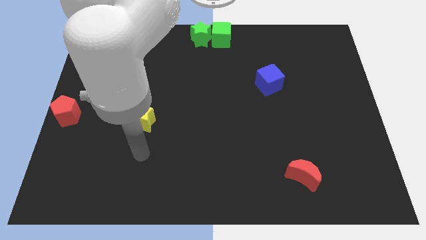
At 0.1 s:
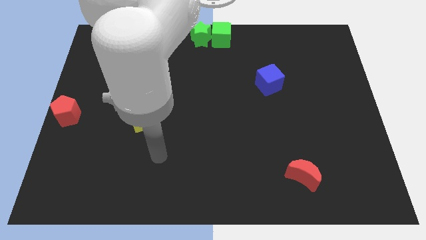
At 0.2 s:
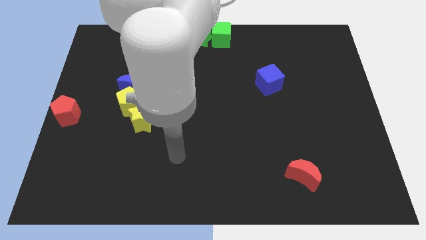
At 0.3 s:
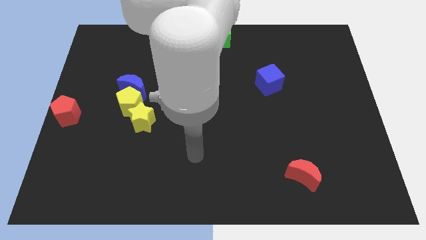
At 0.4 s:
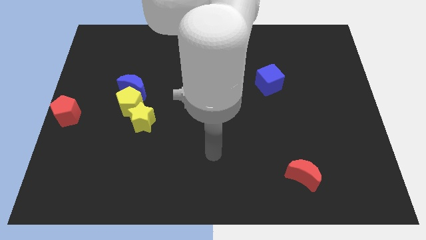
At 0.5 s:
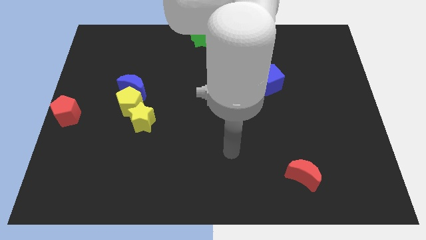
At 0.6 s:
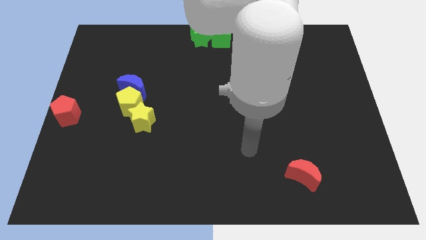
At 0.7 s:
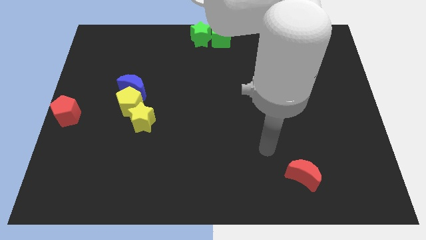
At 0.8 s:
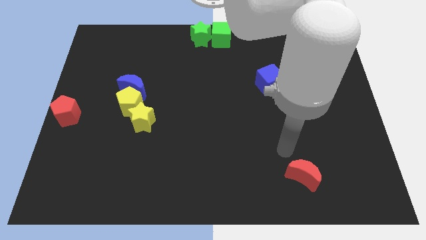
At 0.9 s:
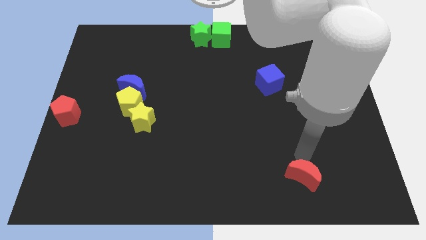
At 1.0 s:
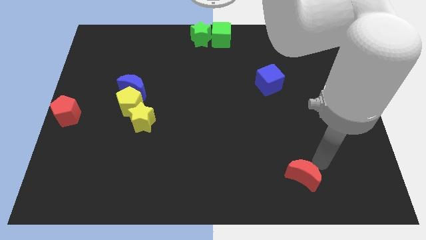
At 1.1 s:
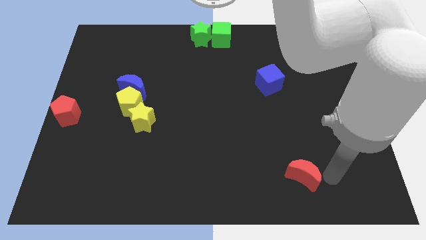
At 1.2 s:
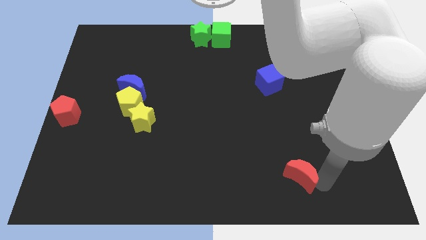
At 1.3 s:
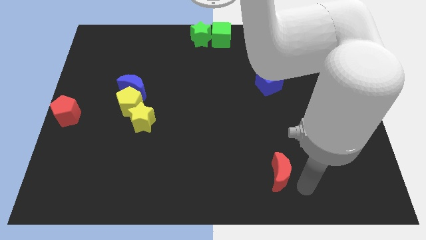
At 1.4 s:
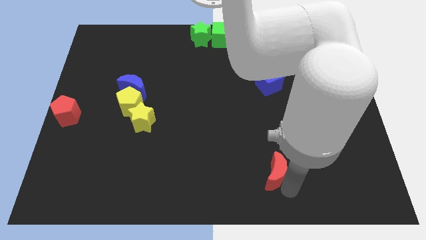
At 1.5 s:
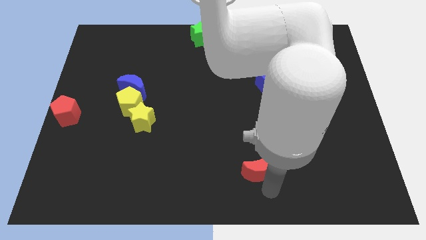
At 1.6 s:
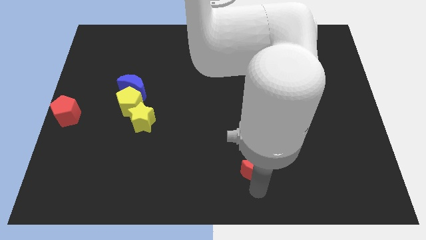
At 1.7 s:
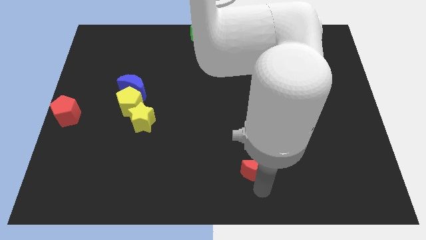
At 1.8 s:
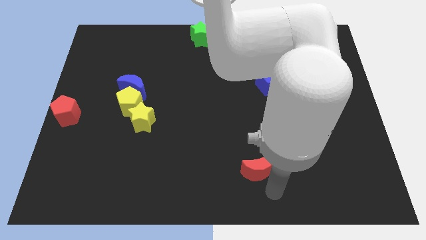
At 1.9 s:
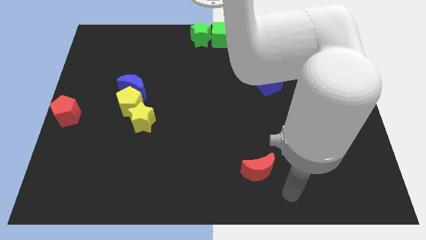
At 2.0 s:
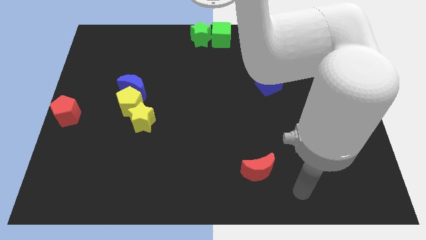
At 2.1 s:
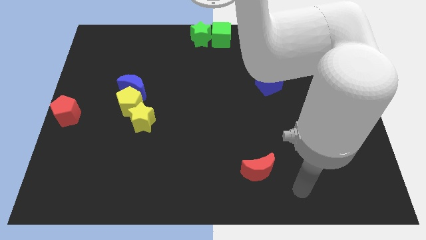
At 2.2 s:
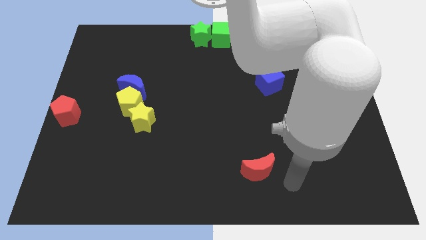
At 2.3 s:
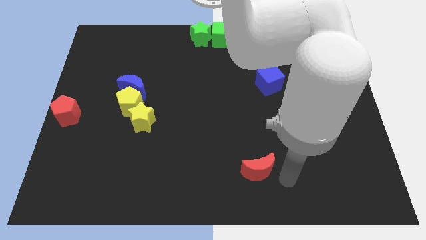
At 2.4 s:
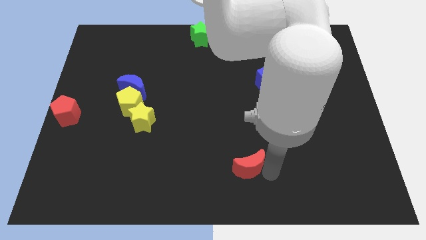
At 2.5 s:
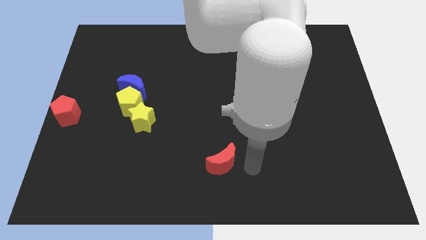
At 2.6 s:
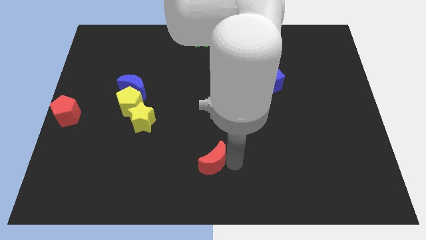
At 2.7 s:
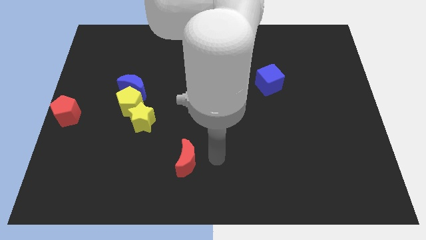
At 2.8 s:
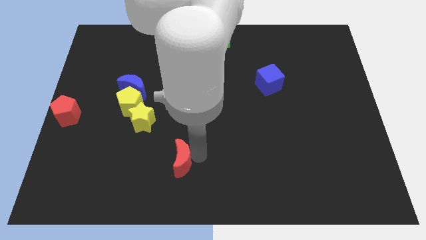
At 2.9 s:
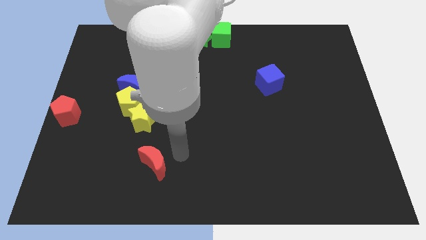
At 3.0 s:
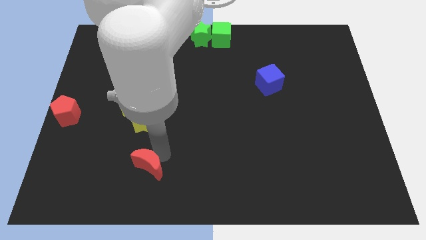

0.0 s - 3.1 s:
place the red moon below the yellow star

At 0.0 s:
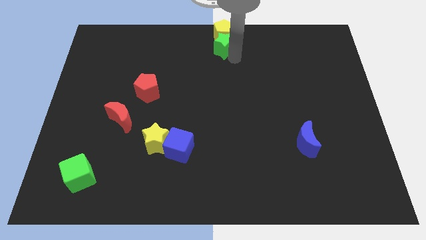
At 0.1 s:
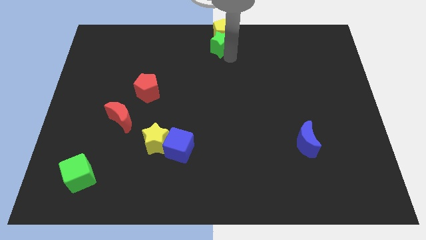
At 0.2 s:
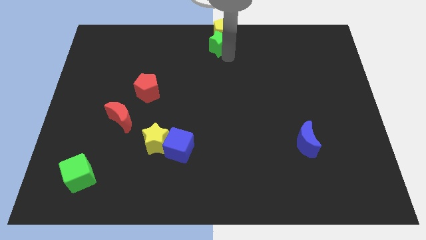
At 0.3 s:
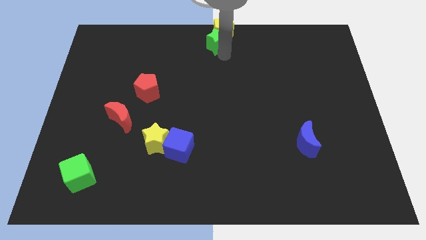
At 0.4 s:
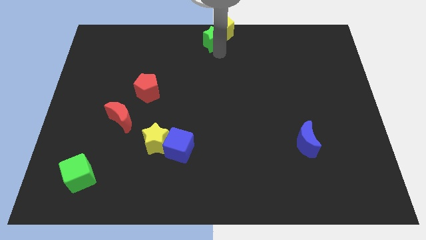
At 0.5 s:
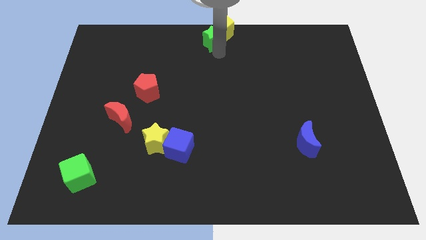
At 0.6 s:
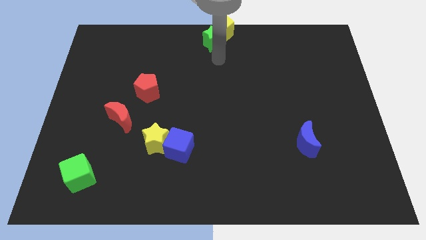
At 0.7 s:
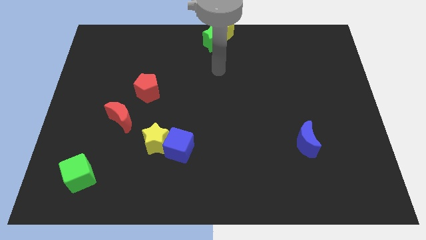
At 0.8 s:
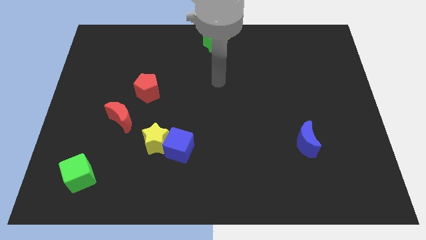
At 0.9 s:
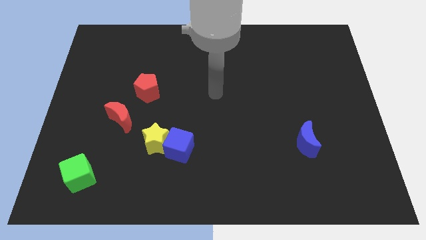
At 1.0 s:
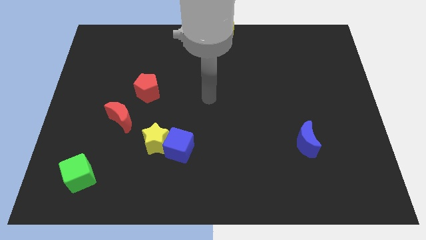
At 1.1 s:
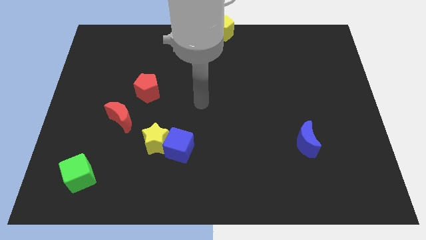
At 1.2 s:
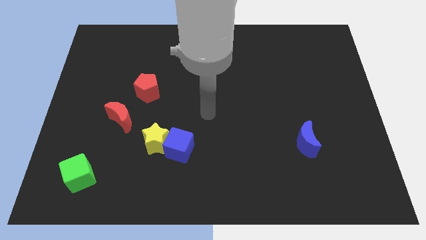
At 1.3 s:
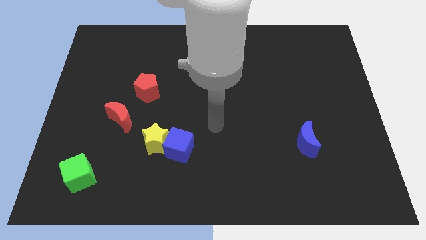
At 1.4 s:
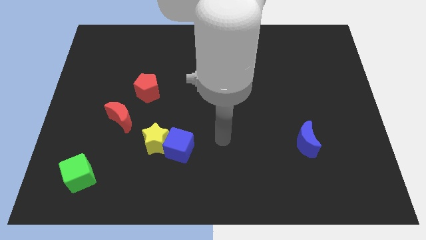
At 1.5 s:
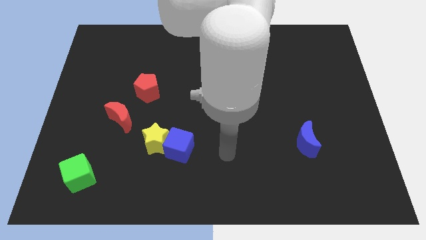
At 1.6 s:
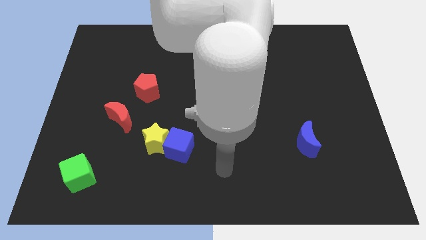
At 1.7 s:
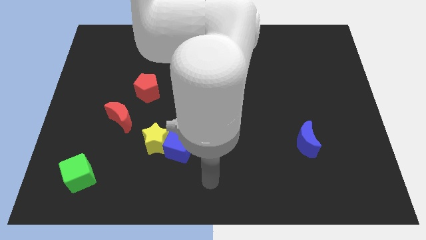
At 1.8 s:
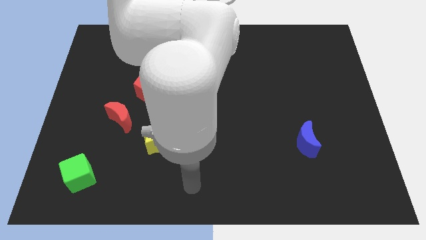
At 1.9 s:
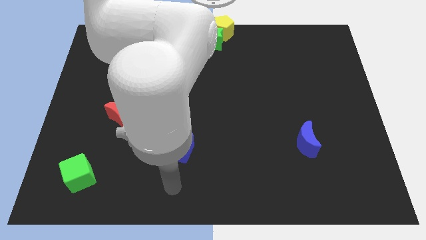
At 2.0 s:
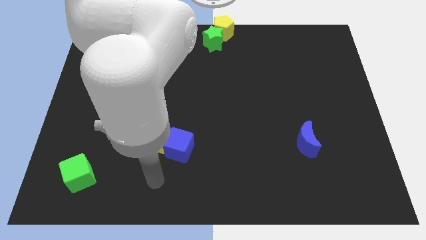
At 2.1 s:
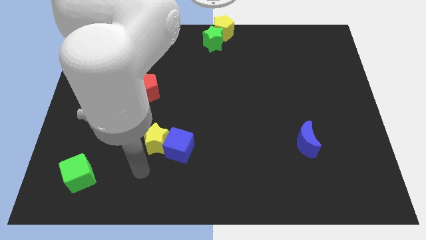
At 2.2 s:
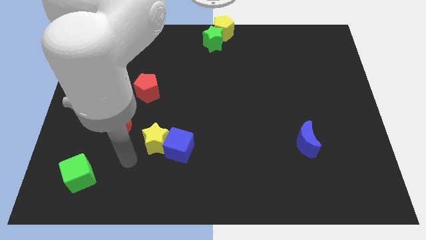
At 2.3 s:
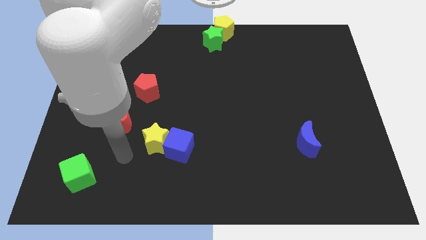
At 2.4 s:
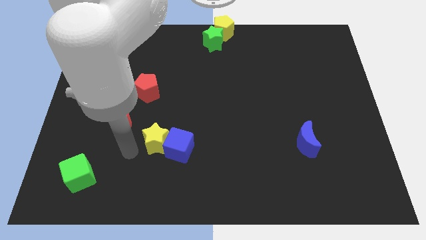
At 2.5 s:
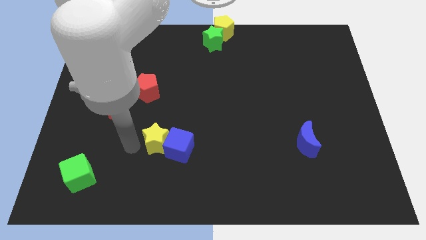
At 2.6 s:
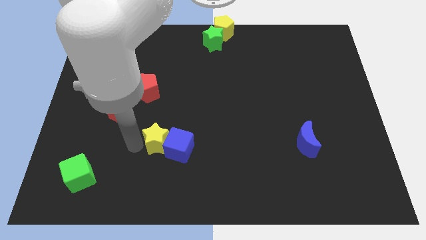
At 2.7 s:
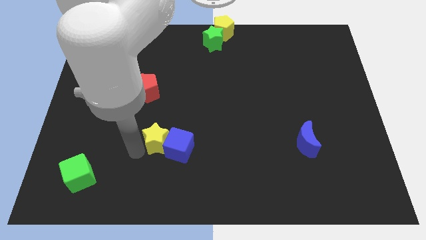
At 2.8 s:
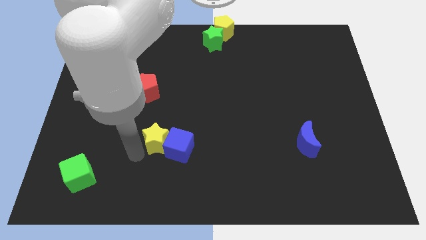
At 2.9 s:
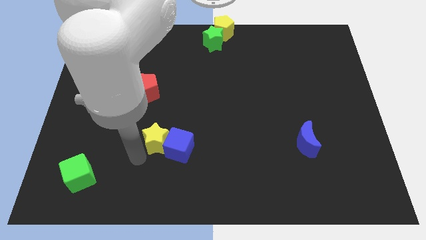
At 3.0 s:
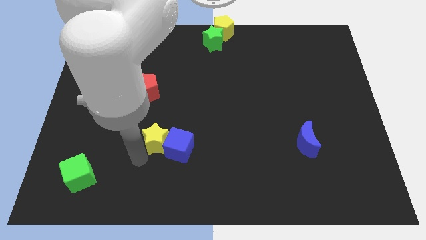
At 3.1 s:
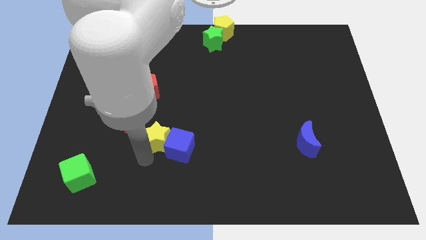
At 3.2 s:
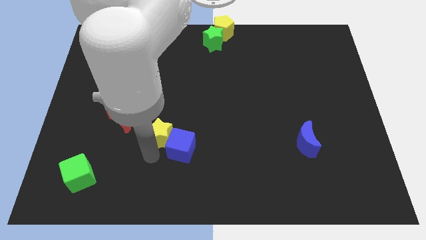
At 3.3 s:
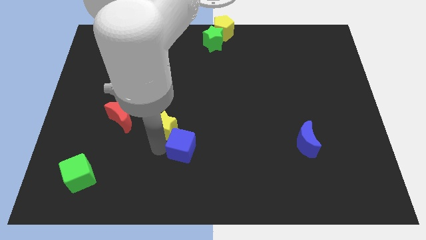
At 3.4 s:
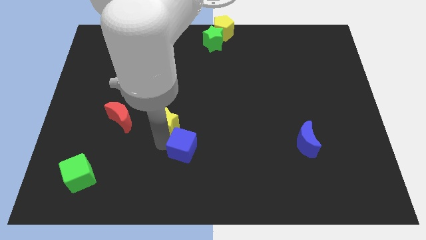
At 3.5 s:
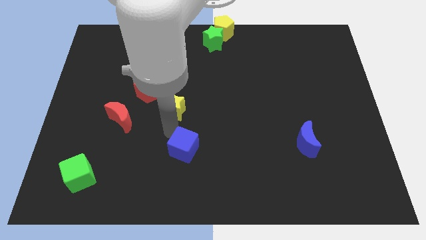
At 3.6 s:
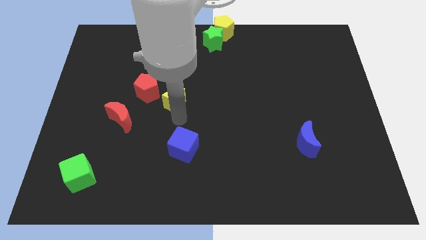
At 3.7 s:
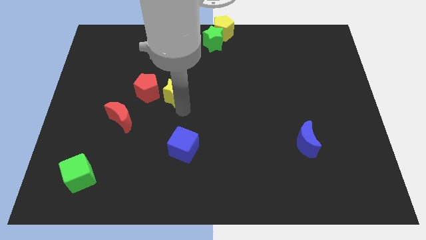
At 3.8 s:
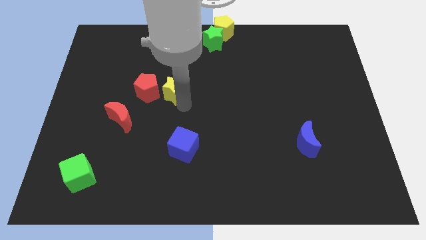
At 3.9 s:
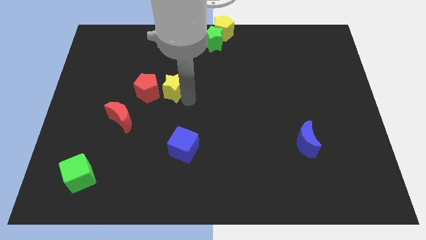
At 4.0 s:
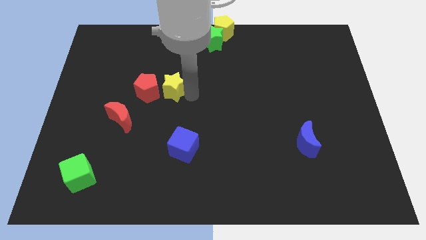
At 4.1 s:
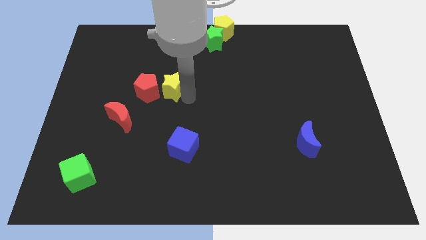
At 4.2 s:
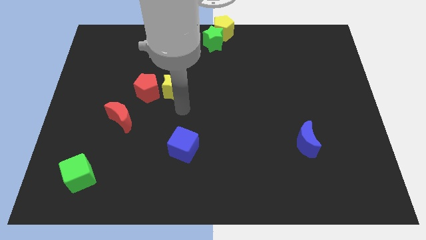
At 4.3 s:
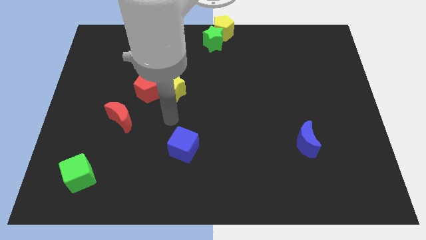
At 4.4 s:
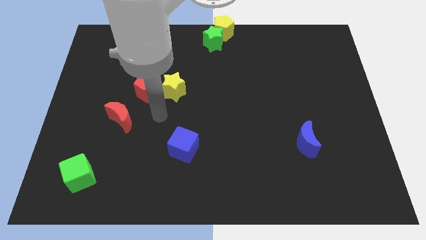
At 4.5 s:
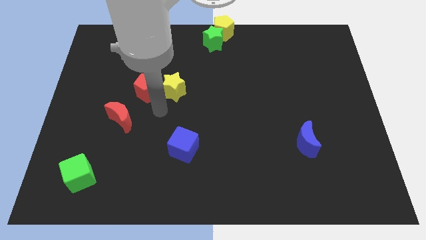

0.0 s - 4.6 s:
move the yellow star towards the right side of the red pentagon

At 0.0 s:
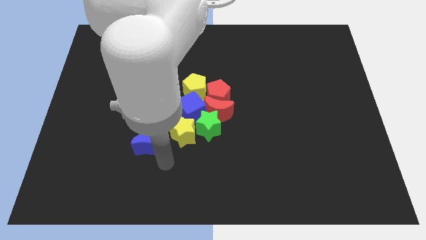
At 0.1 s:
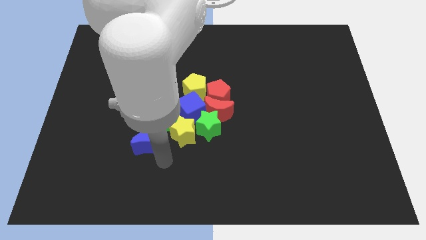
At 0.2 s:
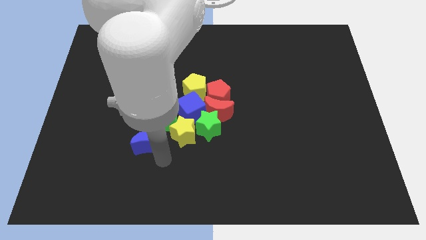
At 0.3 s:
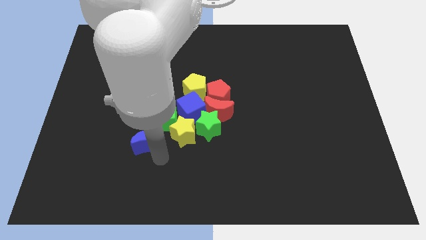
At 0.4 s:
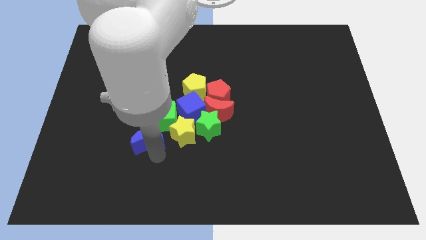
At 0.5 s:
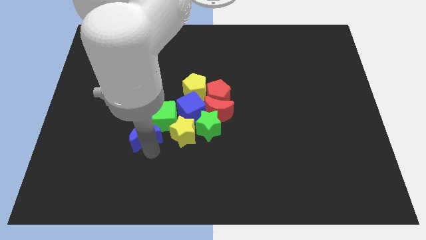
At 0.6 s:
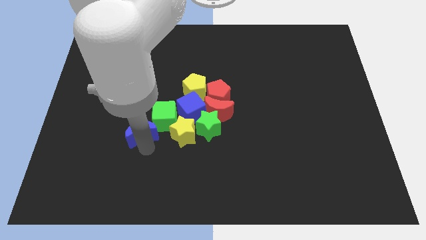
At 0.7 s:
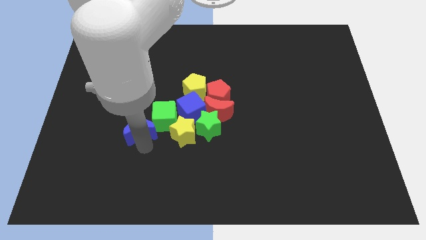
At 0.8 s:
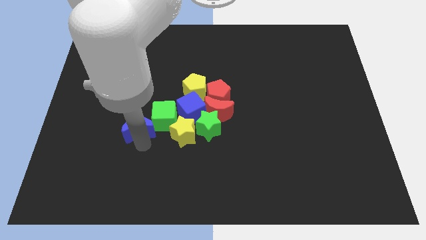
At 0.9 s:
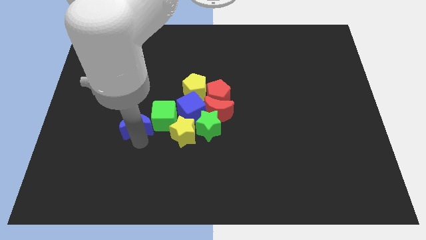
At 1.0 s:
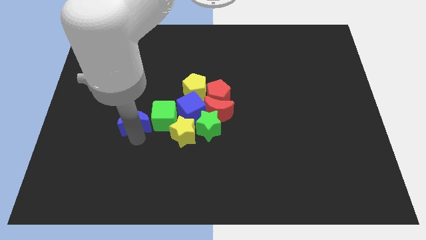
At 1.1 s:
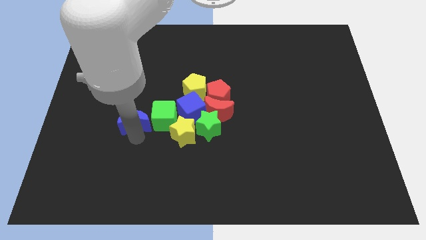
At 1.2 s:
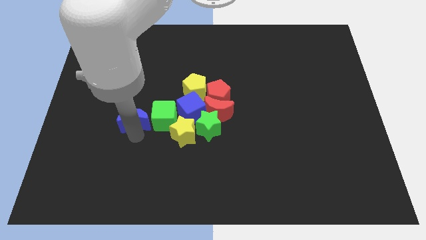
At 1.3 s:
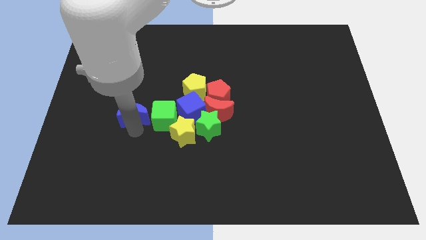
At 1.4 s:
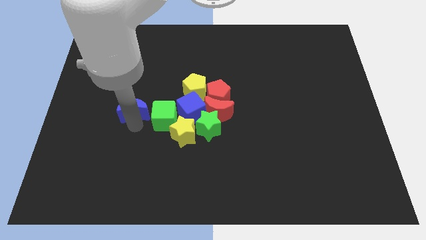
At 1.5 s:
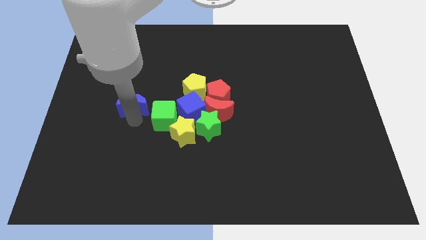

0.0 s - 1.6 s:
place blue moon left to green cube
